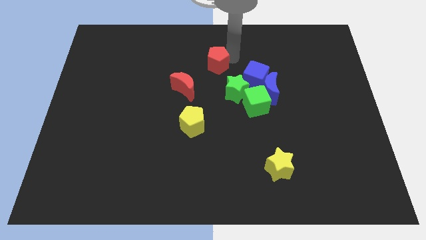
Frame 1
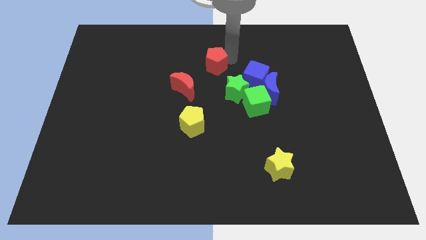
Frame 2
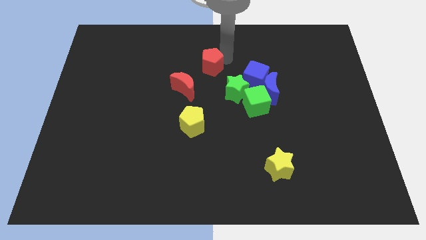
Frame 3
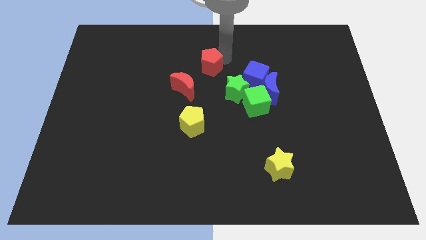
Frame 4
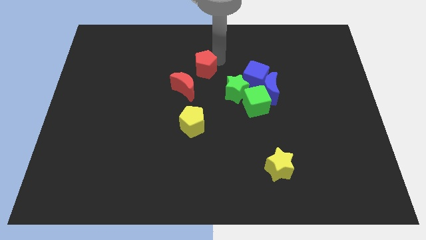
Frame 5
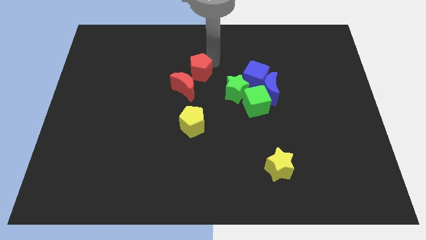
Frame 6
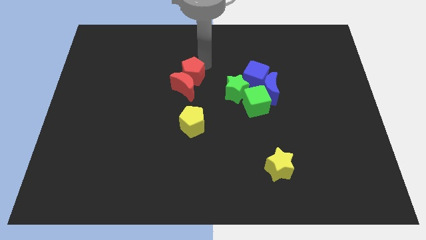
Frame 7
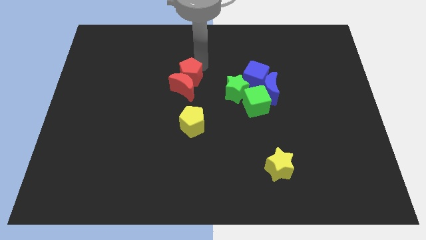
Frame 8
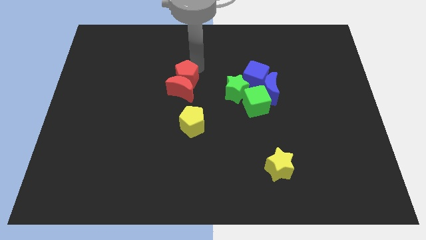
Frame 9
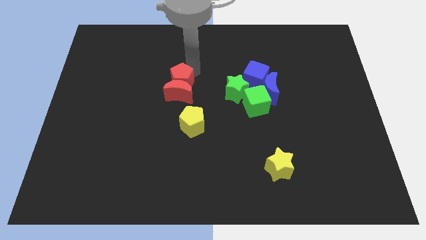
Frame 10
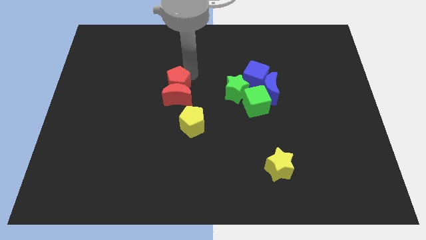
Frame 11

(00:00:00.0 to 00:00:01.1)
push red pentagon into red moon

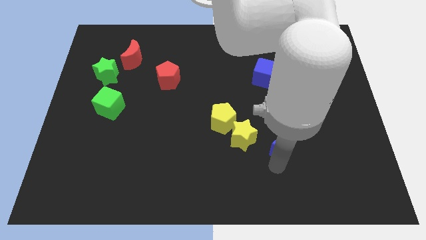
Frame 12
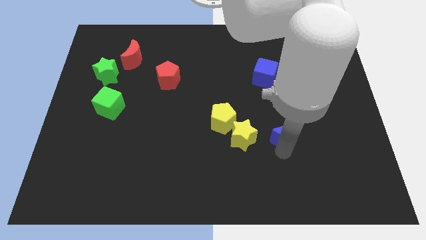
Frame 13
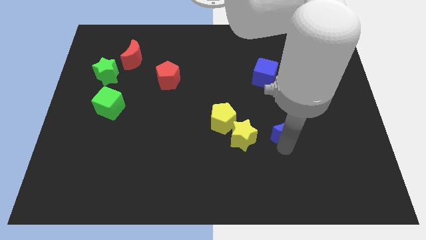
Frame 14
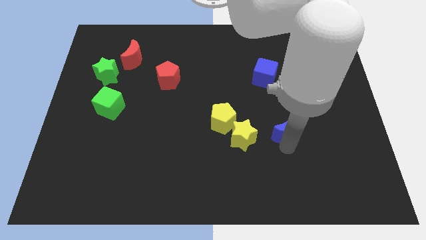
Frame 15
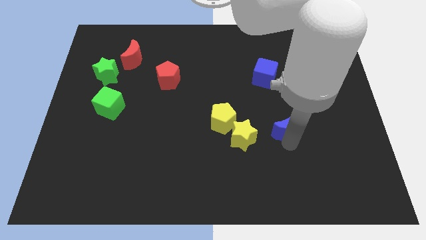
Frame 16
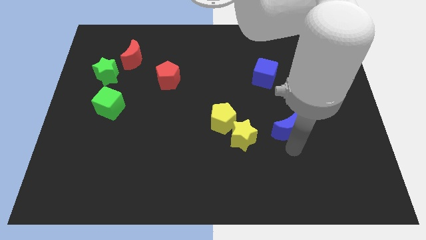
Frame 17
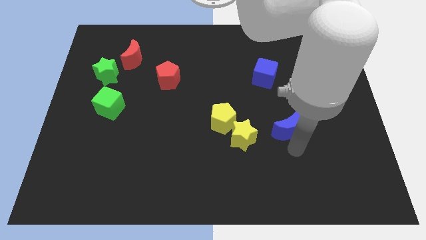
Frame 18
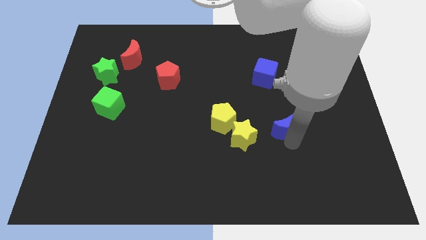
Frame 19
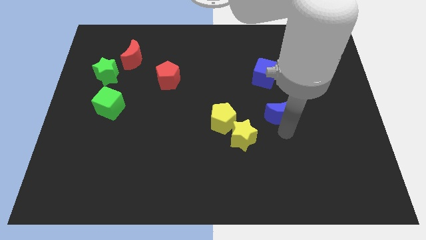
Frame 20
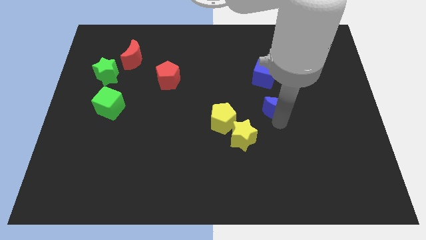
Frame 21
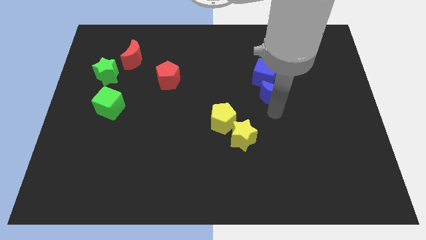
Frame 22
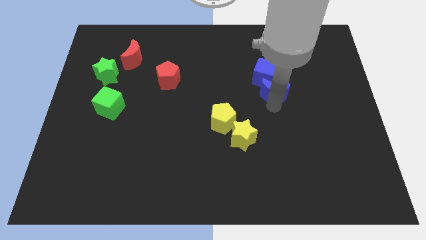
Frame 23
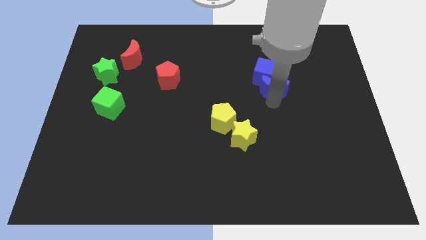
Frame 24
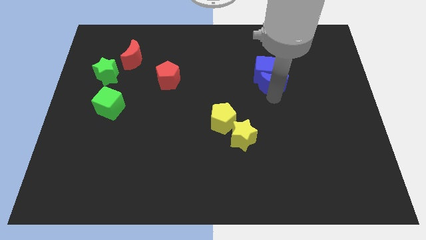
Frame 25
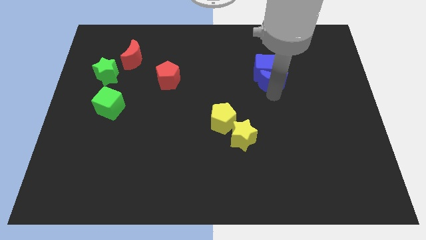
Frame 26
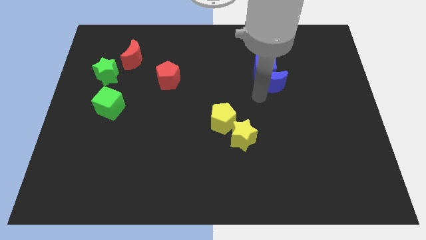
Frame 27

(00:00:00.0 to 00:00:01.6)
place the blue crescent close to the blue cube

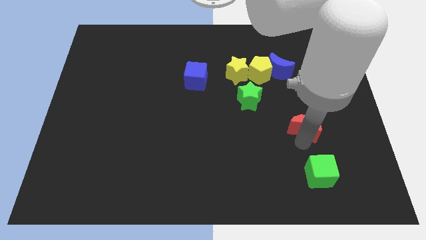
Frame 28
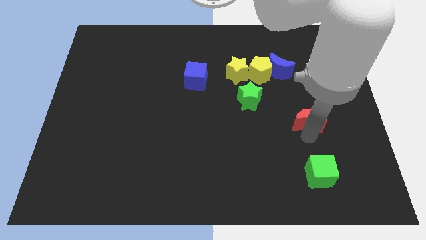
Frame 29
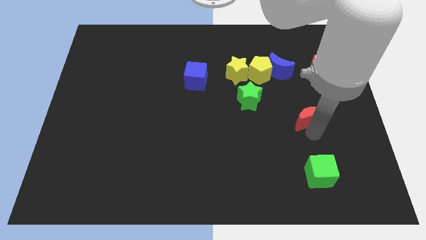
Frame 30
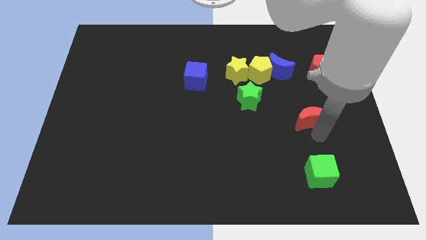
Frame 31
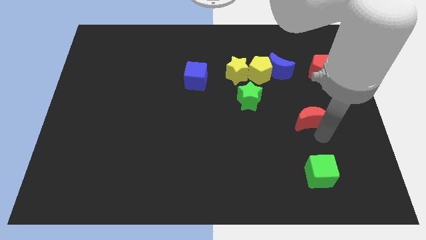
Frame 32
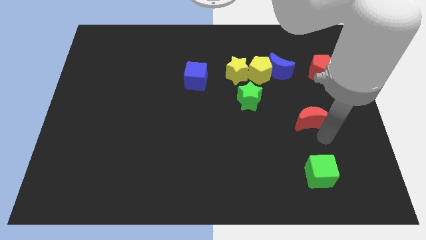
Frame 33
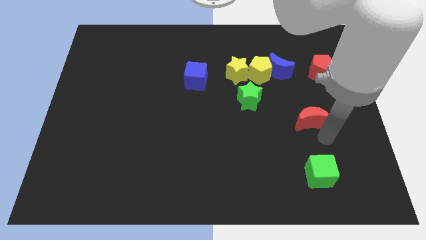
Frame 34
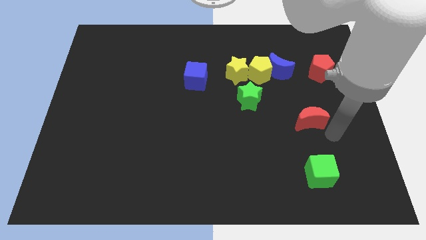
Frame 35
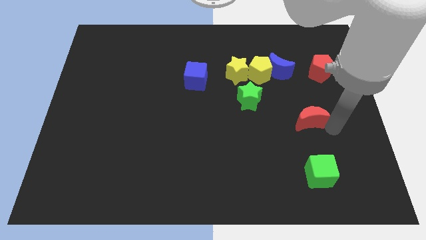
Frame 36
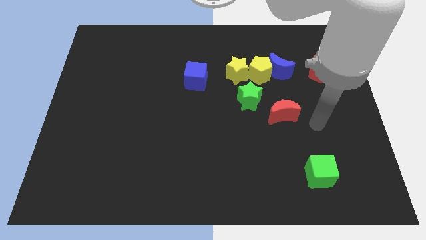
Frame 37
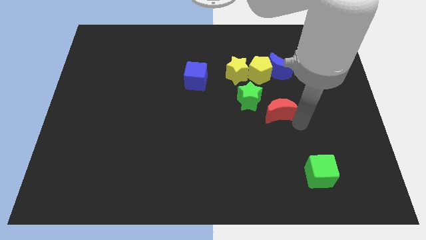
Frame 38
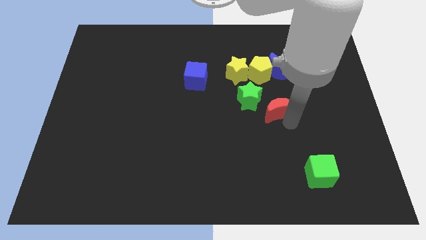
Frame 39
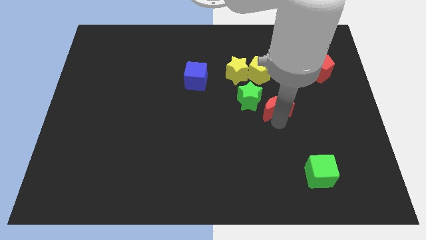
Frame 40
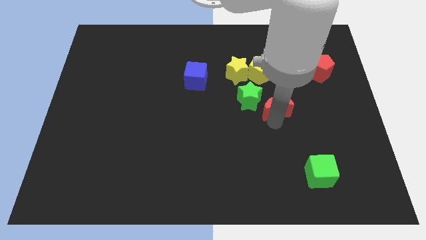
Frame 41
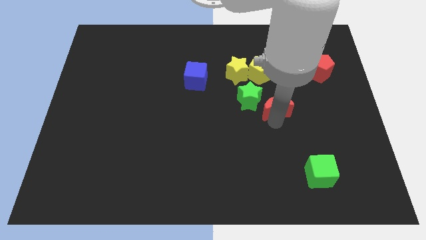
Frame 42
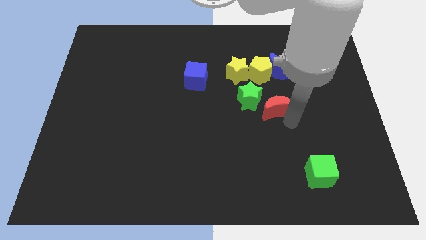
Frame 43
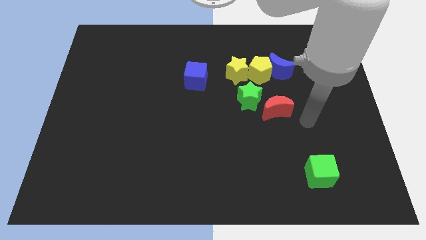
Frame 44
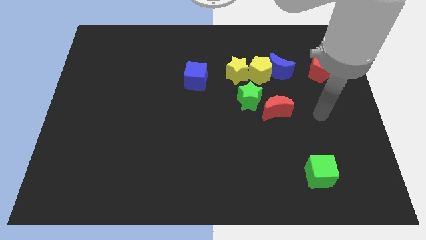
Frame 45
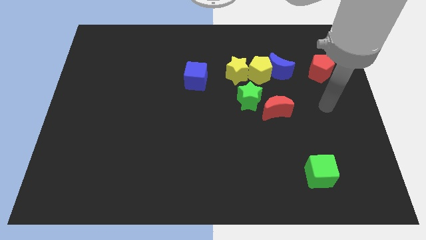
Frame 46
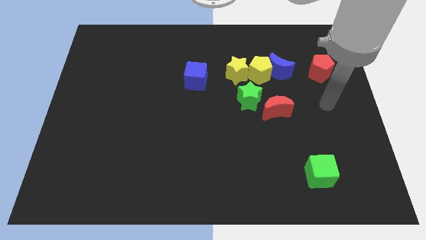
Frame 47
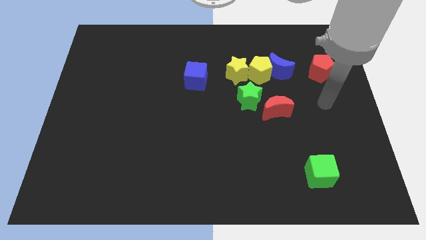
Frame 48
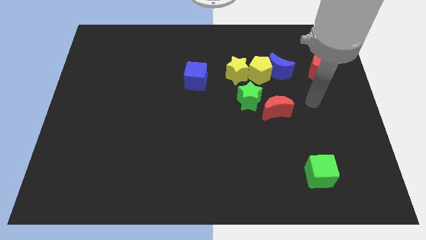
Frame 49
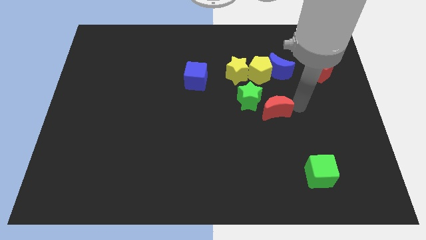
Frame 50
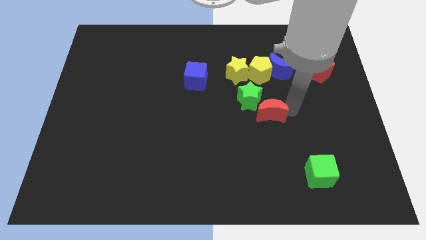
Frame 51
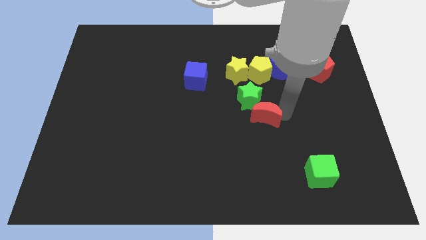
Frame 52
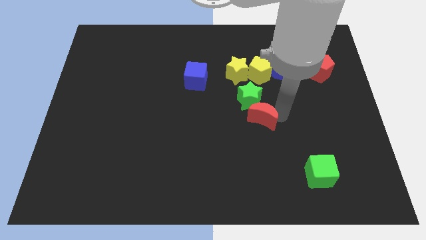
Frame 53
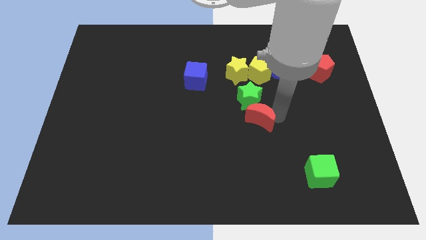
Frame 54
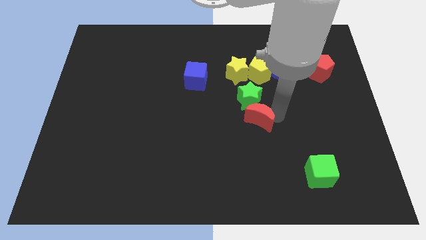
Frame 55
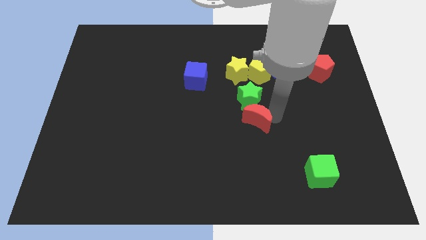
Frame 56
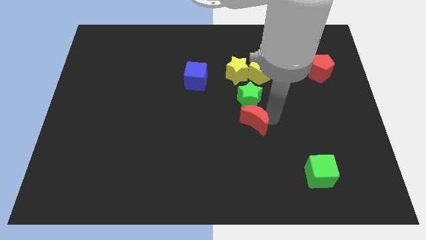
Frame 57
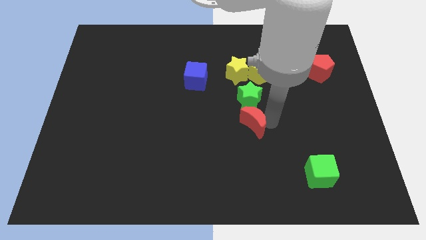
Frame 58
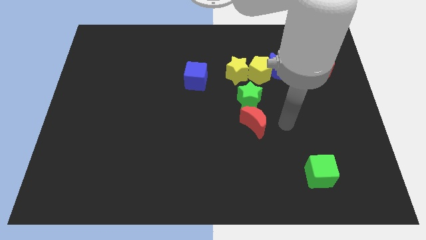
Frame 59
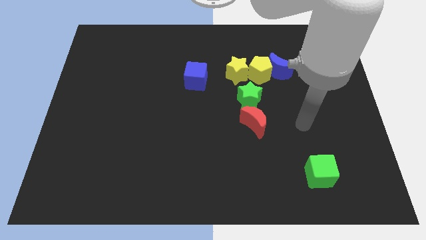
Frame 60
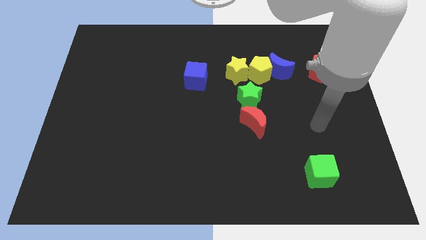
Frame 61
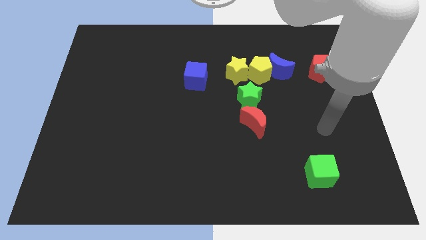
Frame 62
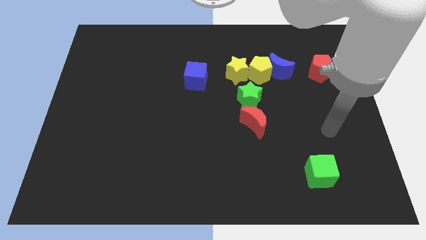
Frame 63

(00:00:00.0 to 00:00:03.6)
put the red crescent diagonally on the bottom right side of the blue cube

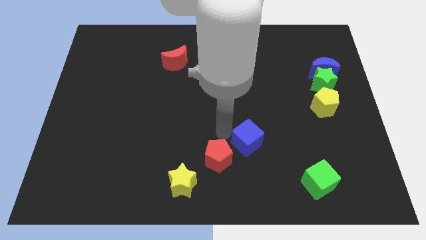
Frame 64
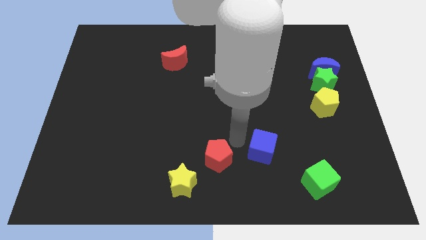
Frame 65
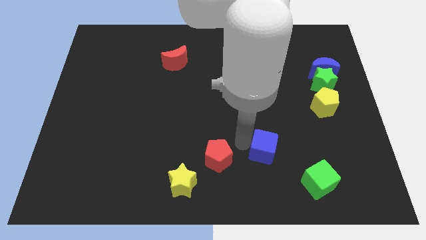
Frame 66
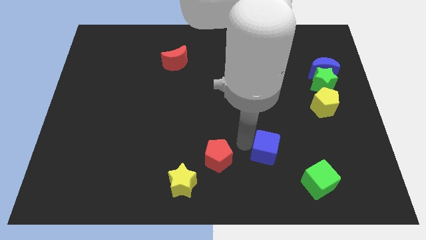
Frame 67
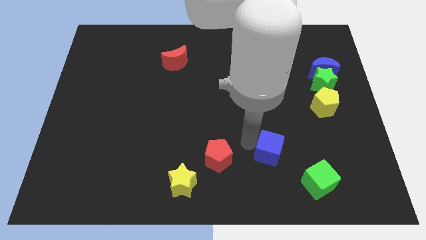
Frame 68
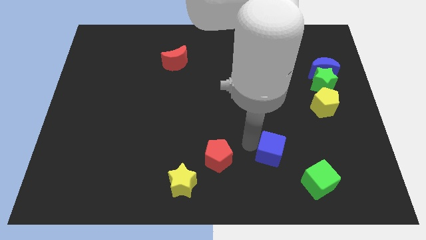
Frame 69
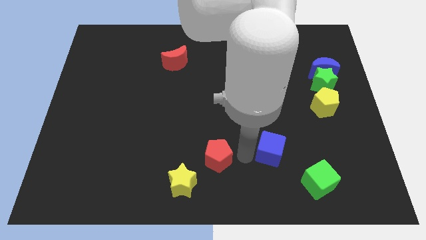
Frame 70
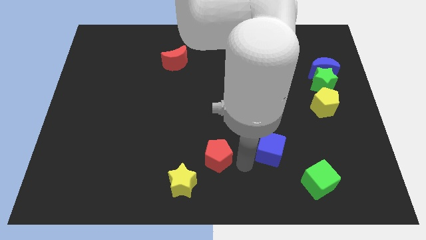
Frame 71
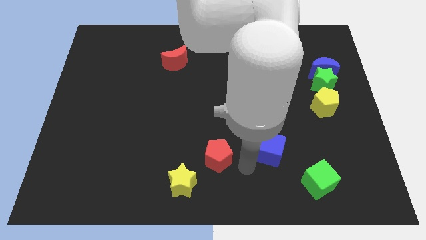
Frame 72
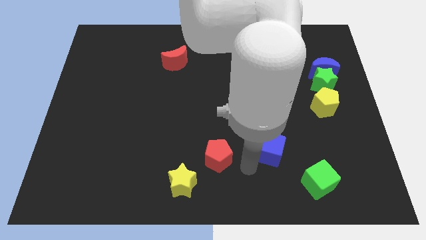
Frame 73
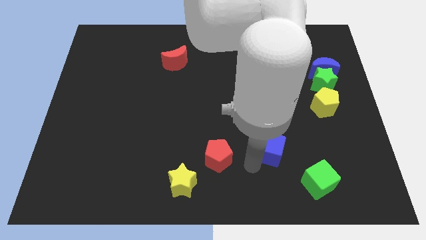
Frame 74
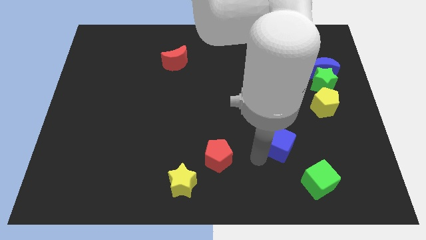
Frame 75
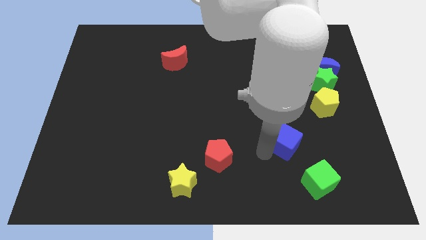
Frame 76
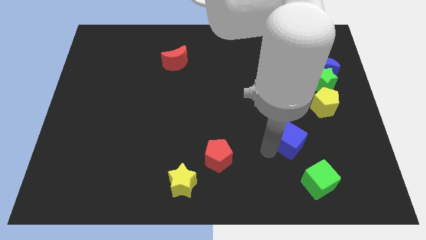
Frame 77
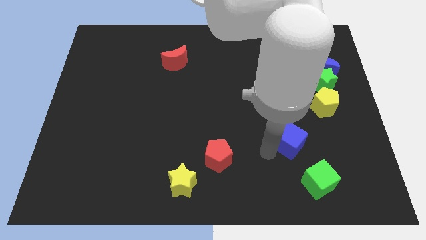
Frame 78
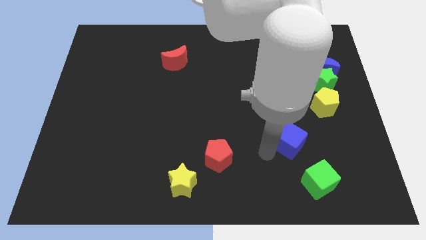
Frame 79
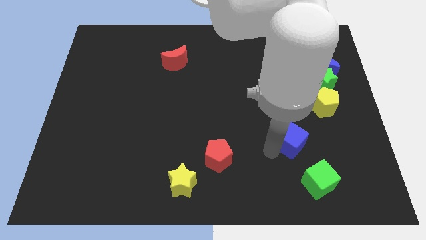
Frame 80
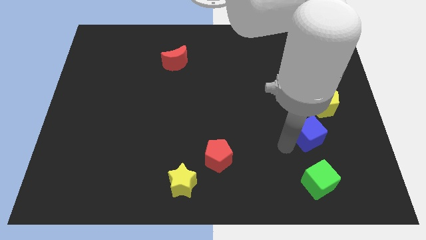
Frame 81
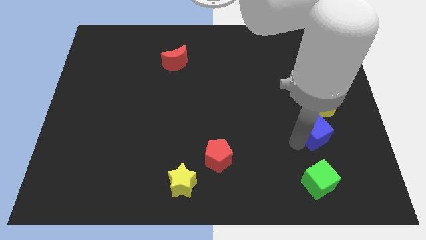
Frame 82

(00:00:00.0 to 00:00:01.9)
move the blue cube diagonally to the top of the green cube

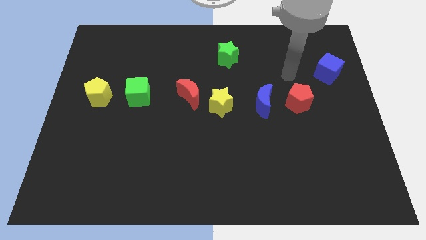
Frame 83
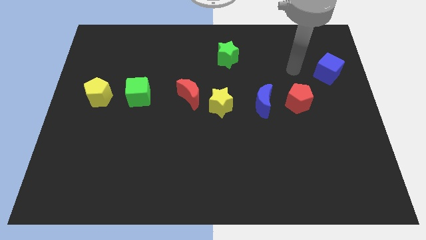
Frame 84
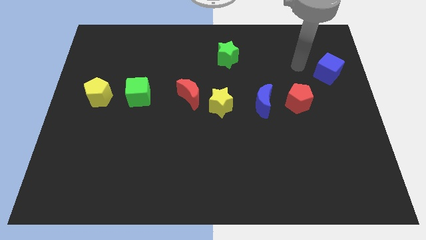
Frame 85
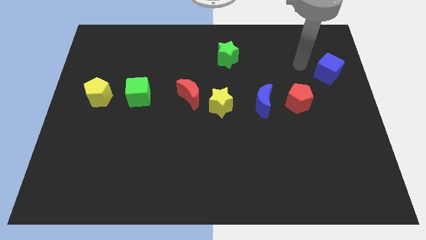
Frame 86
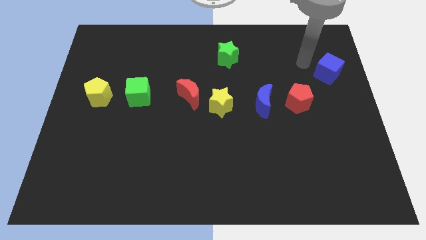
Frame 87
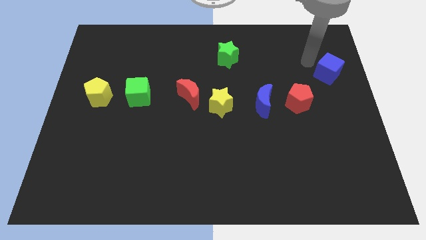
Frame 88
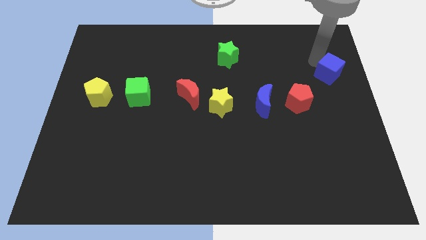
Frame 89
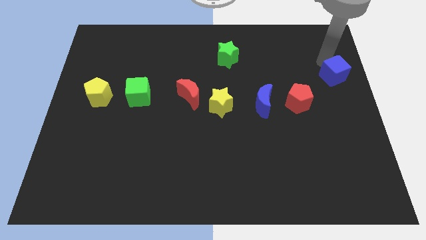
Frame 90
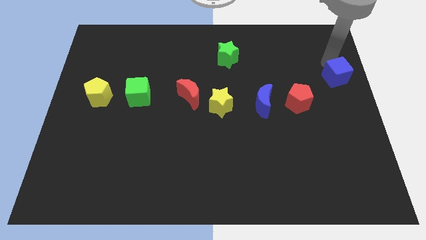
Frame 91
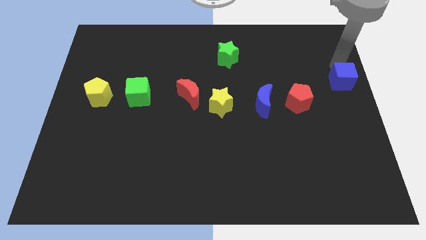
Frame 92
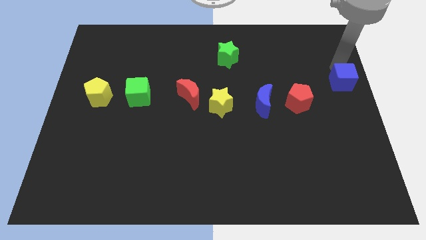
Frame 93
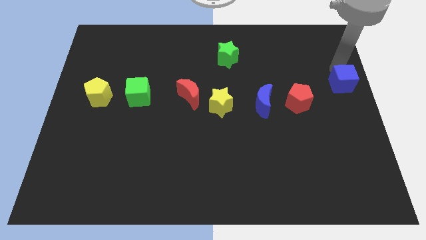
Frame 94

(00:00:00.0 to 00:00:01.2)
push the blue cube right side of the board
